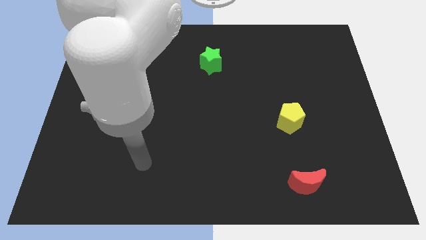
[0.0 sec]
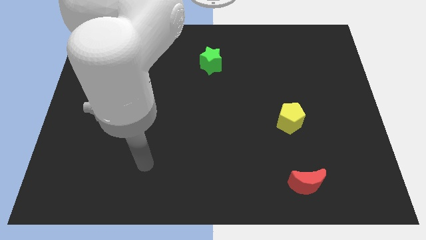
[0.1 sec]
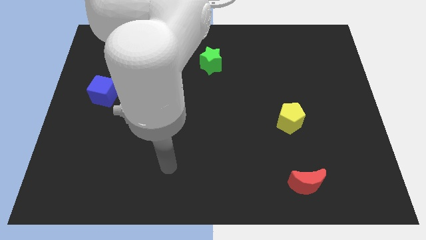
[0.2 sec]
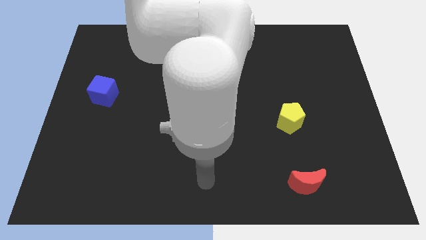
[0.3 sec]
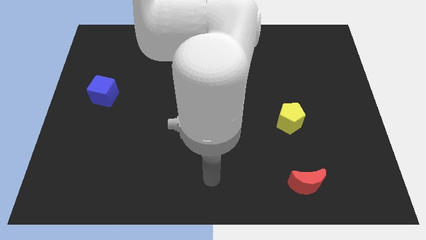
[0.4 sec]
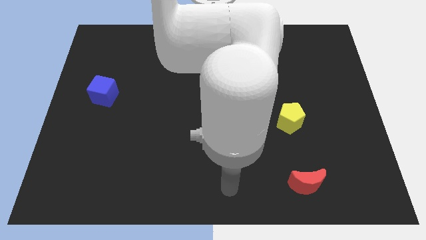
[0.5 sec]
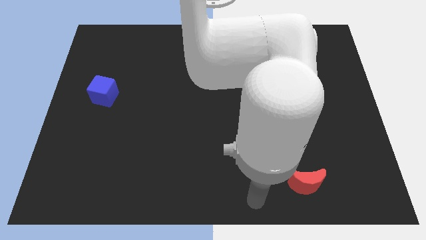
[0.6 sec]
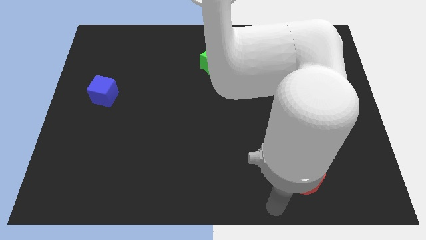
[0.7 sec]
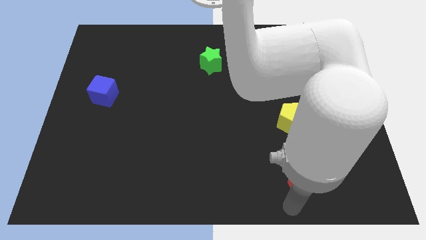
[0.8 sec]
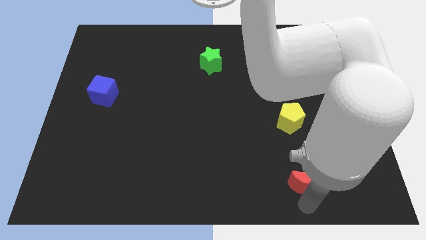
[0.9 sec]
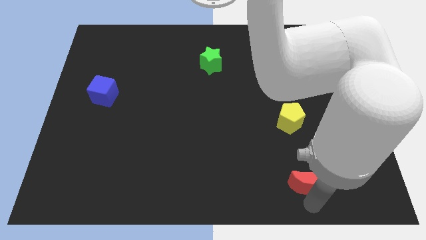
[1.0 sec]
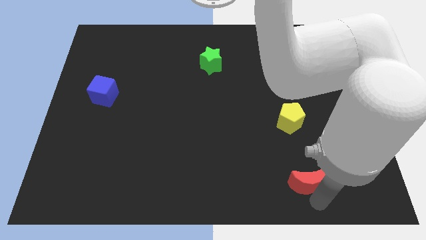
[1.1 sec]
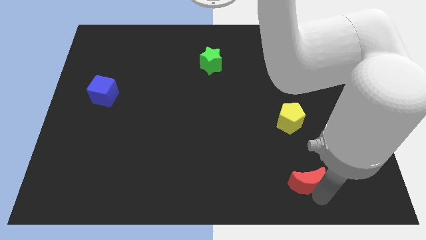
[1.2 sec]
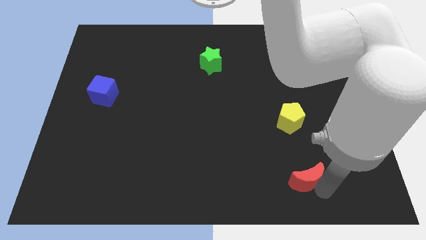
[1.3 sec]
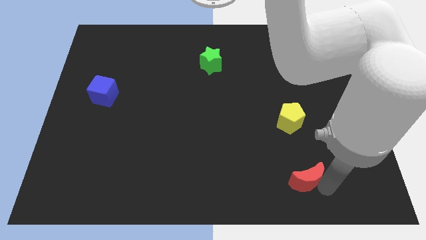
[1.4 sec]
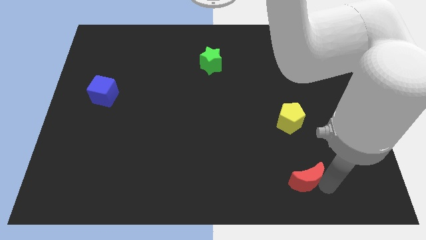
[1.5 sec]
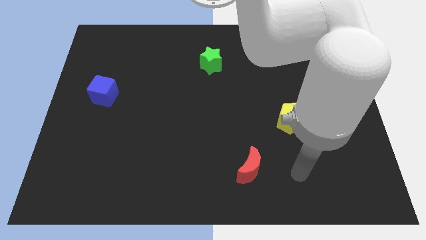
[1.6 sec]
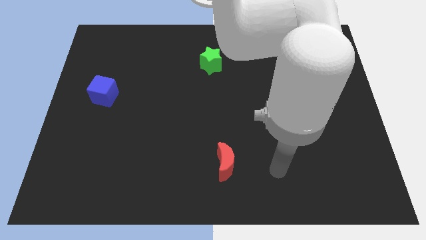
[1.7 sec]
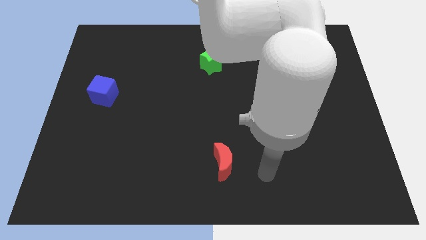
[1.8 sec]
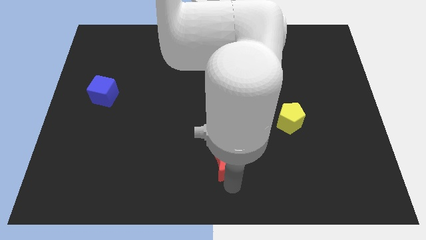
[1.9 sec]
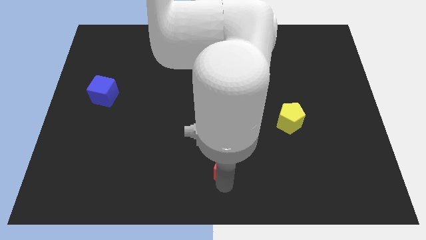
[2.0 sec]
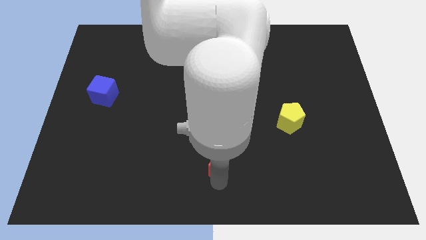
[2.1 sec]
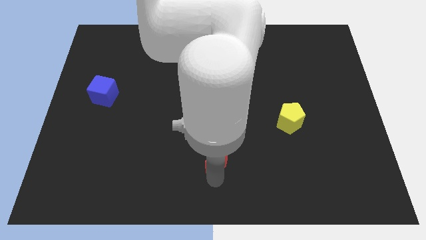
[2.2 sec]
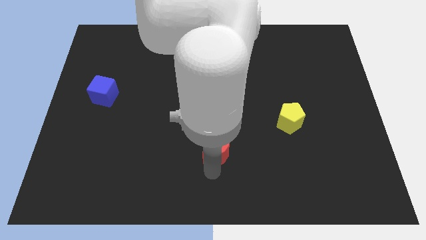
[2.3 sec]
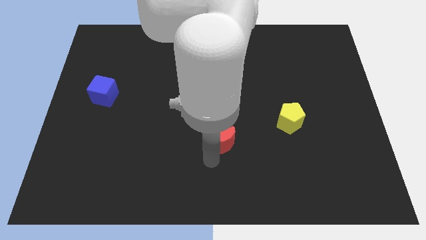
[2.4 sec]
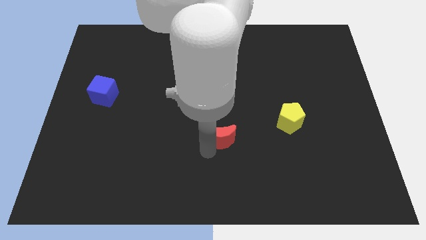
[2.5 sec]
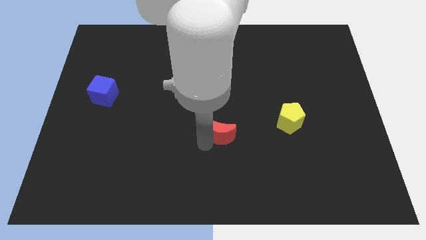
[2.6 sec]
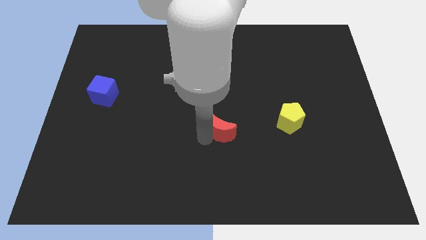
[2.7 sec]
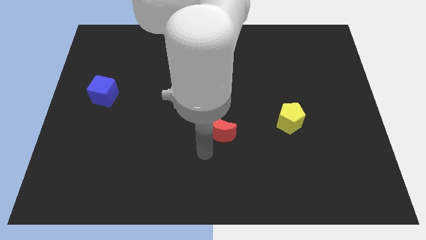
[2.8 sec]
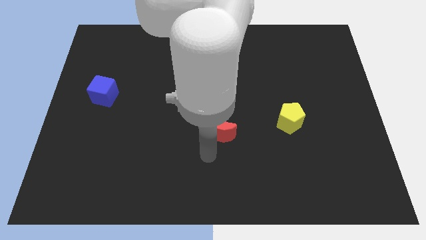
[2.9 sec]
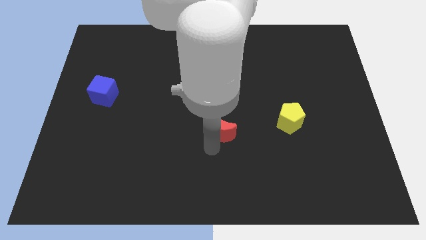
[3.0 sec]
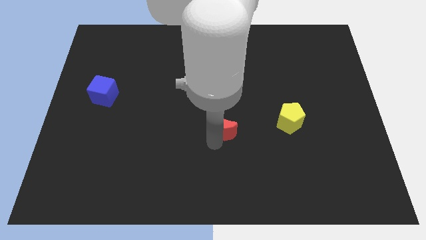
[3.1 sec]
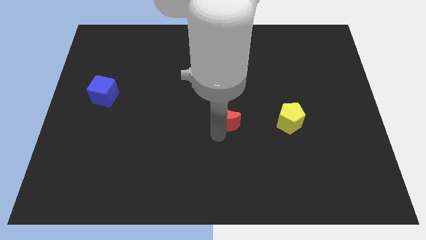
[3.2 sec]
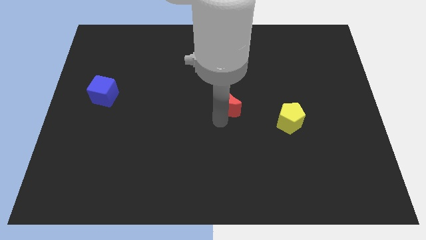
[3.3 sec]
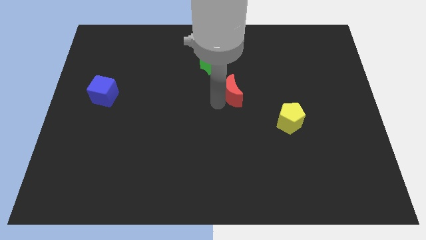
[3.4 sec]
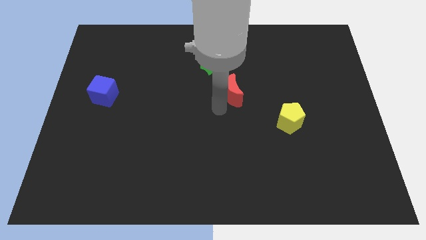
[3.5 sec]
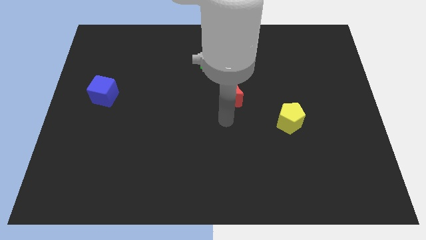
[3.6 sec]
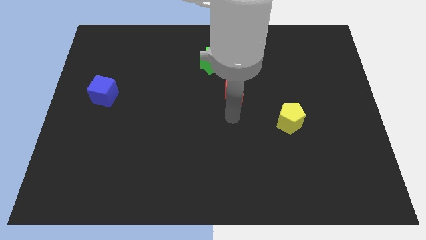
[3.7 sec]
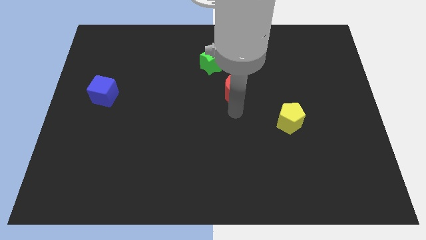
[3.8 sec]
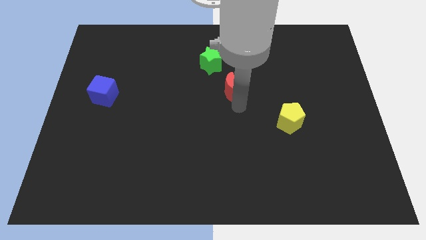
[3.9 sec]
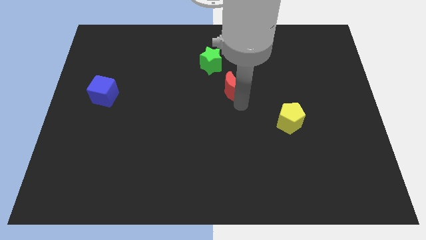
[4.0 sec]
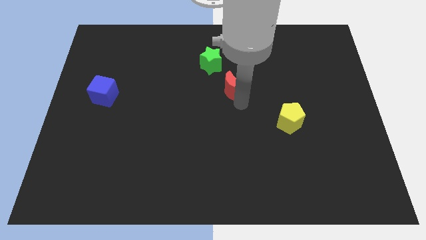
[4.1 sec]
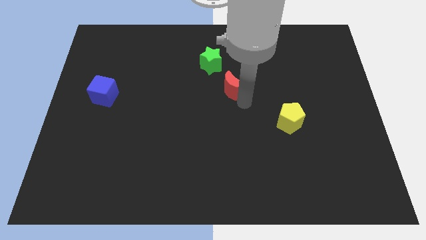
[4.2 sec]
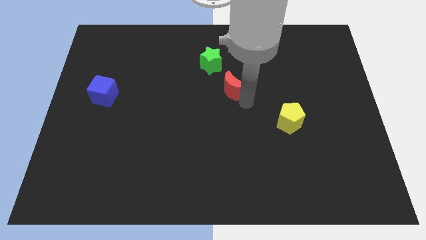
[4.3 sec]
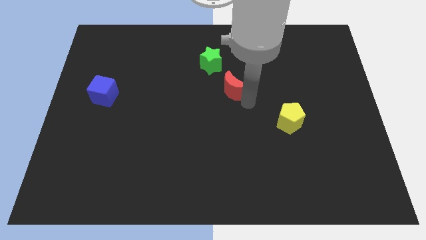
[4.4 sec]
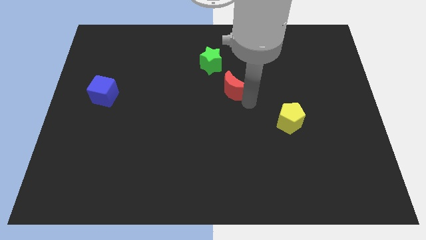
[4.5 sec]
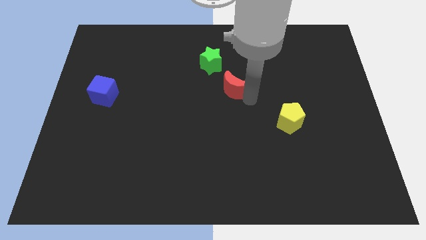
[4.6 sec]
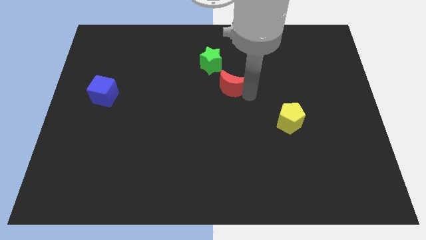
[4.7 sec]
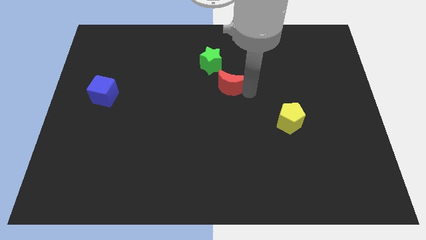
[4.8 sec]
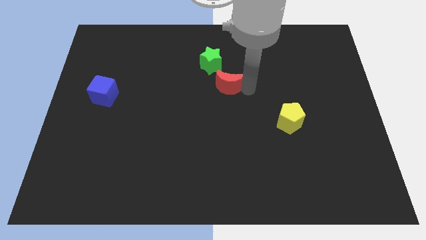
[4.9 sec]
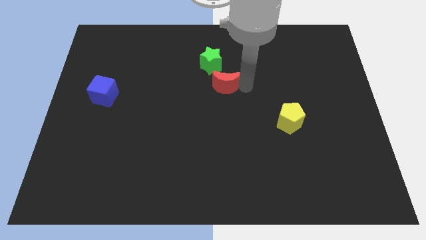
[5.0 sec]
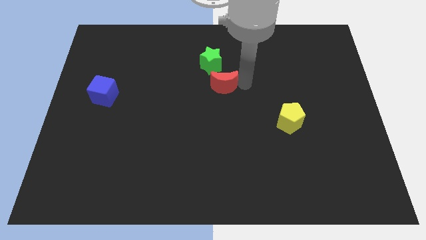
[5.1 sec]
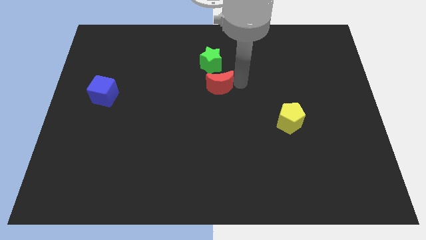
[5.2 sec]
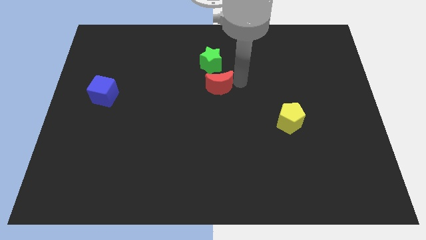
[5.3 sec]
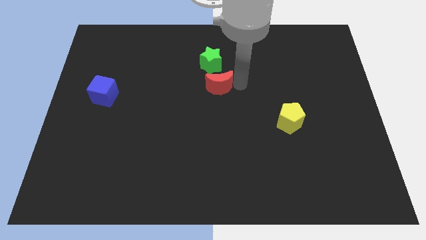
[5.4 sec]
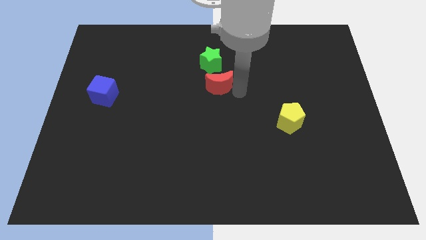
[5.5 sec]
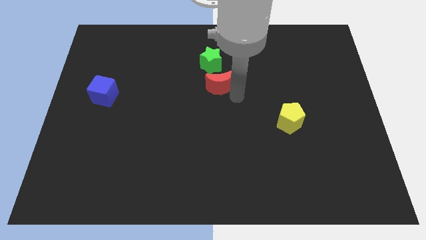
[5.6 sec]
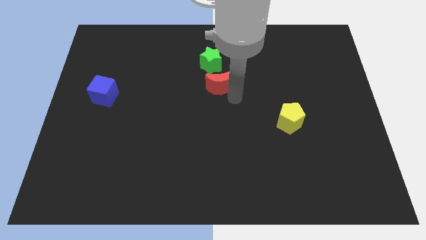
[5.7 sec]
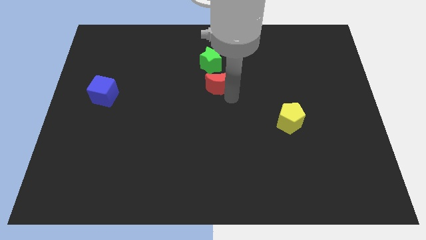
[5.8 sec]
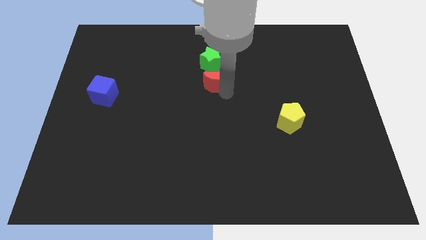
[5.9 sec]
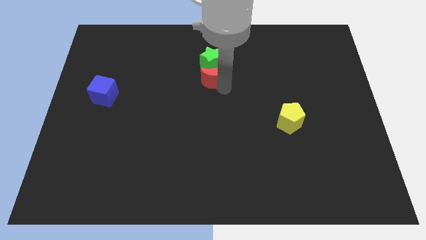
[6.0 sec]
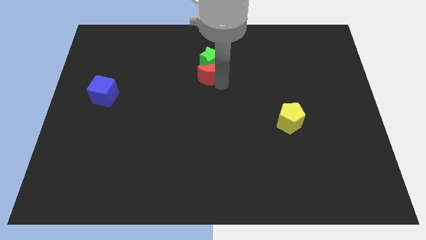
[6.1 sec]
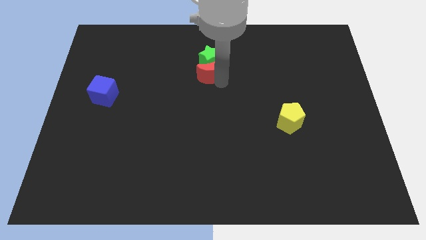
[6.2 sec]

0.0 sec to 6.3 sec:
slide the red block towards the green block

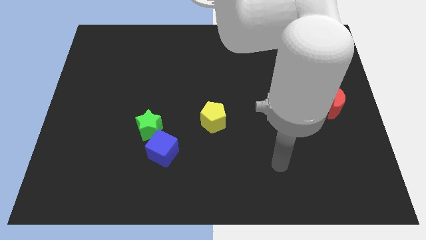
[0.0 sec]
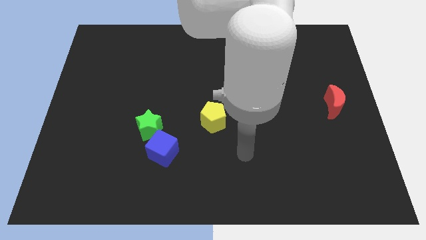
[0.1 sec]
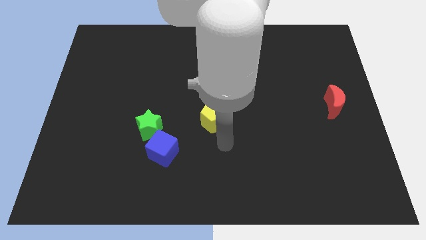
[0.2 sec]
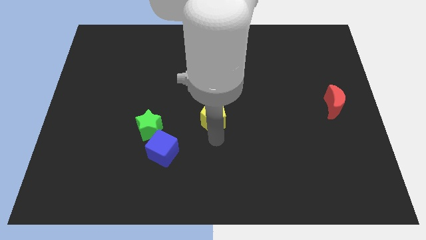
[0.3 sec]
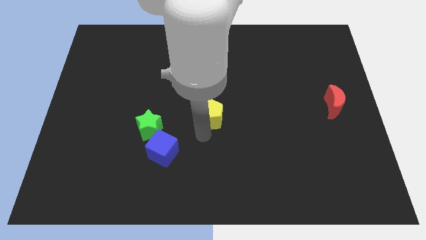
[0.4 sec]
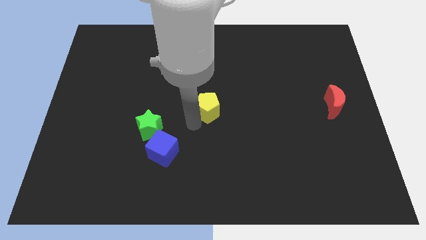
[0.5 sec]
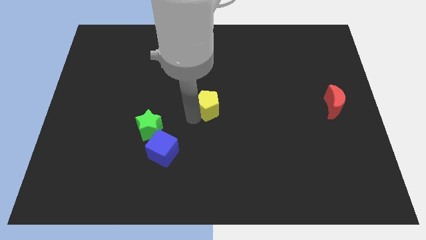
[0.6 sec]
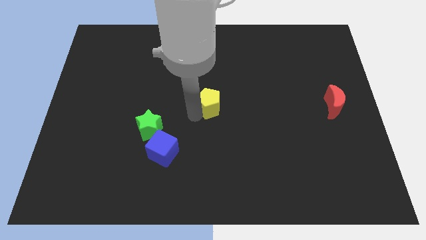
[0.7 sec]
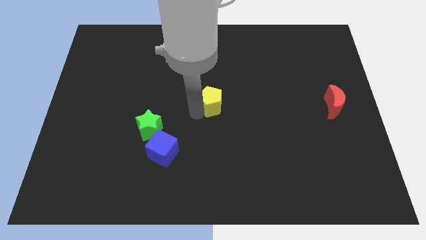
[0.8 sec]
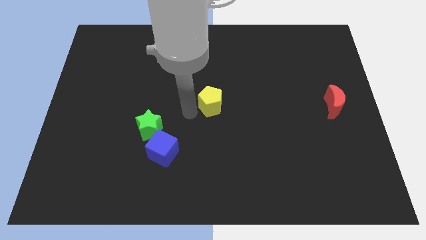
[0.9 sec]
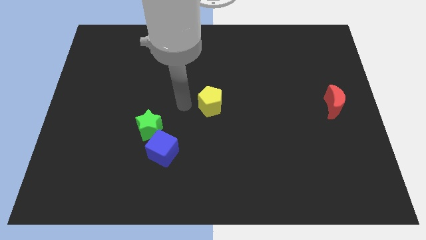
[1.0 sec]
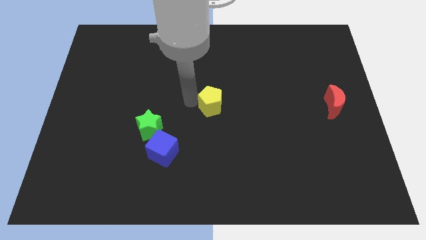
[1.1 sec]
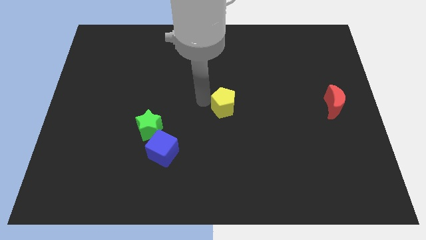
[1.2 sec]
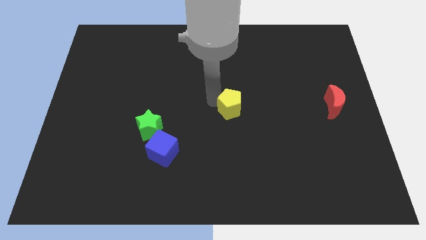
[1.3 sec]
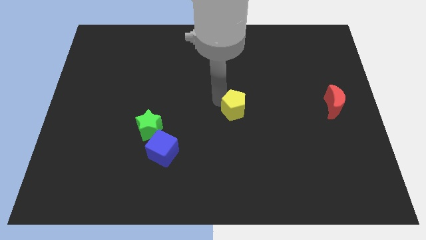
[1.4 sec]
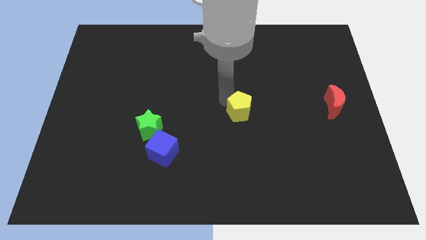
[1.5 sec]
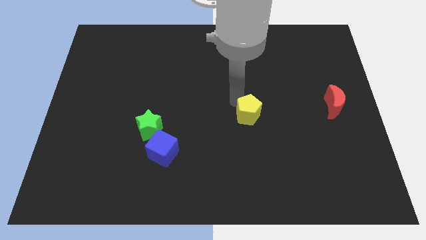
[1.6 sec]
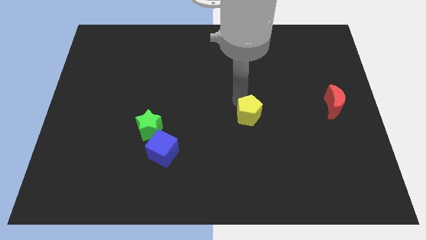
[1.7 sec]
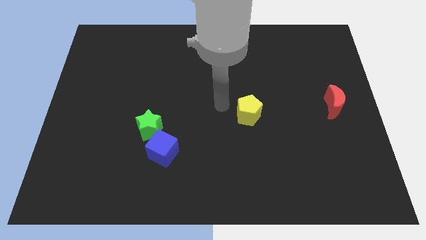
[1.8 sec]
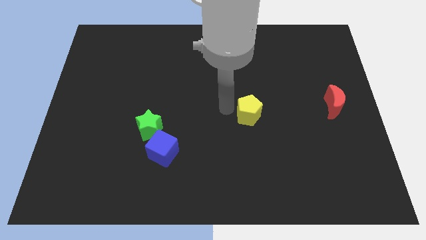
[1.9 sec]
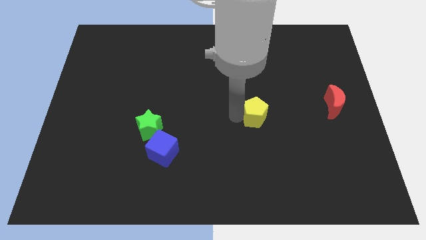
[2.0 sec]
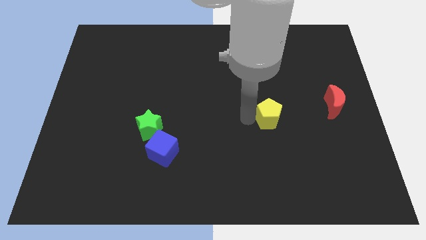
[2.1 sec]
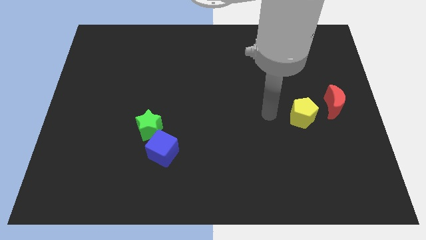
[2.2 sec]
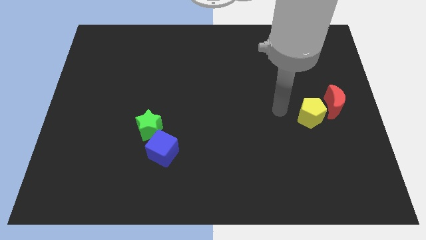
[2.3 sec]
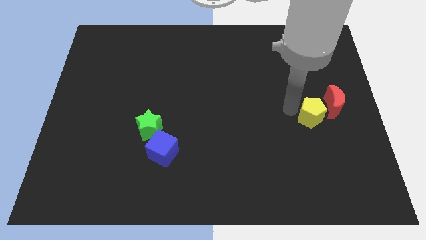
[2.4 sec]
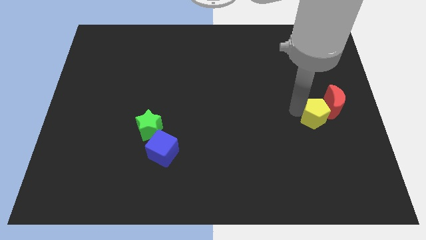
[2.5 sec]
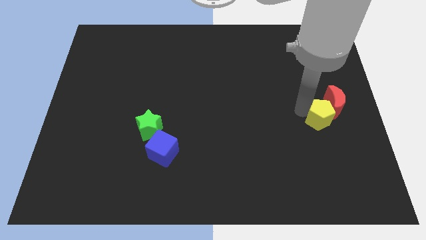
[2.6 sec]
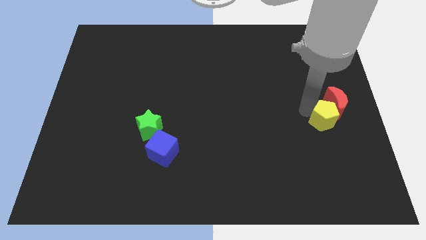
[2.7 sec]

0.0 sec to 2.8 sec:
push the yellow block next to the red block
